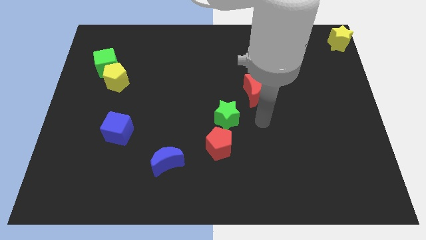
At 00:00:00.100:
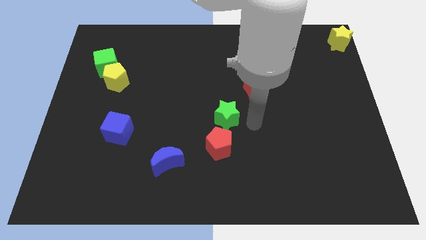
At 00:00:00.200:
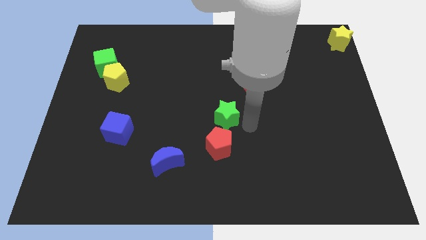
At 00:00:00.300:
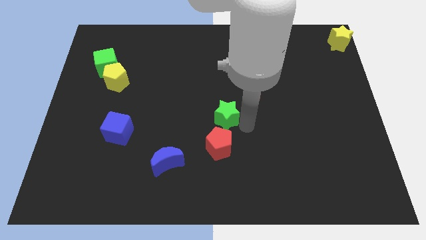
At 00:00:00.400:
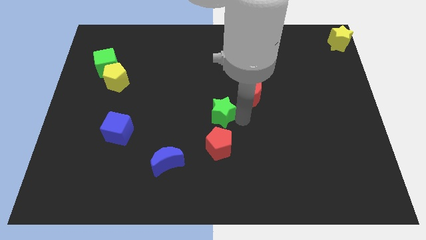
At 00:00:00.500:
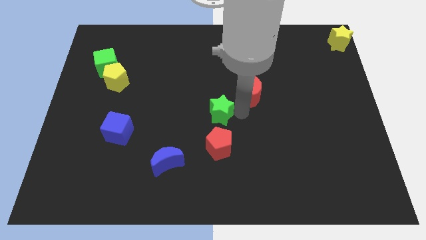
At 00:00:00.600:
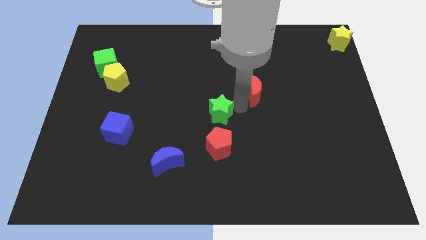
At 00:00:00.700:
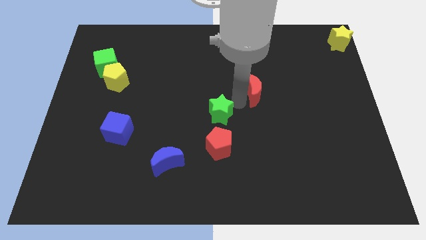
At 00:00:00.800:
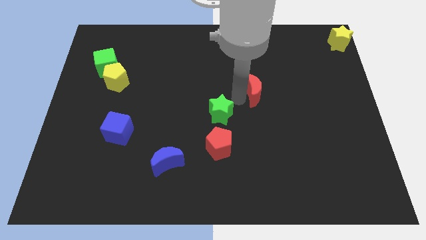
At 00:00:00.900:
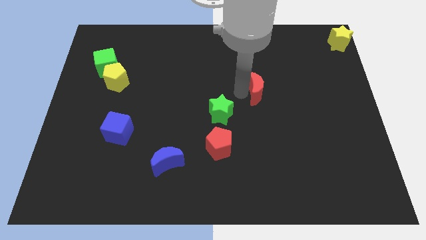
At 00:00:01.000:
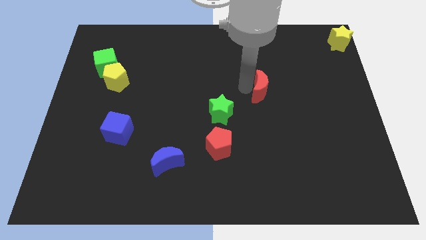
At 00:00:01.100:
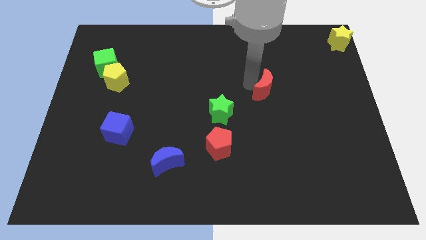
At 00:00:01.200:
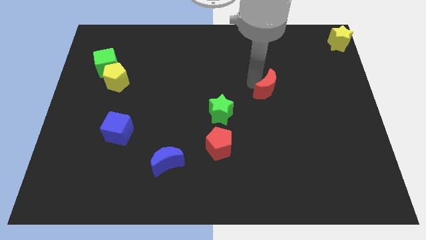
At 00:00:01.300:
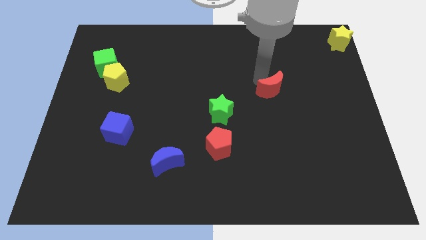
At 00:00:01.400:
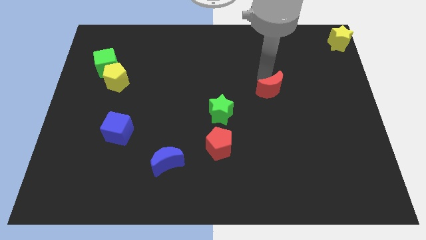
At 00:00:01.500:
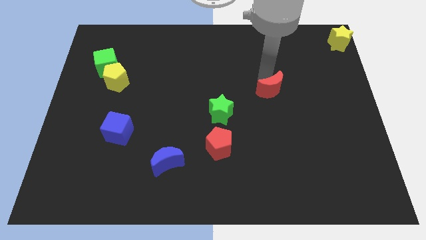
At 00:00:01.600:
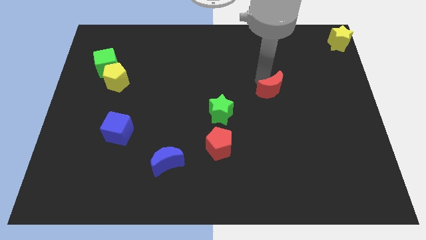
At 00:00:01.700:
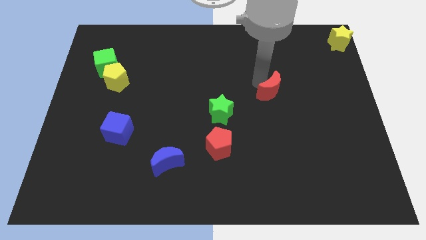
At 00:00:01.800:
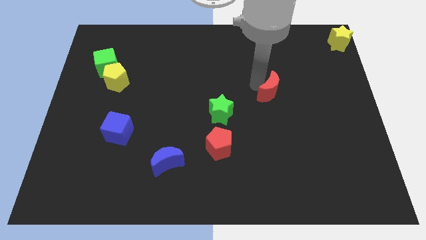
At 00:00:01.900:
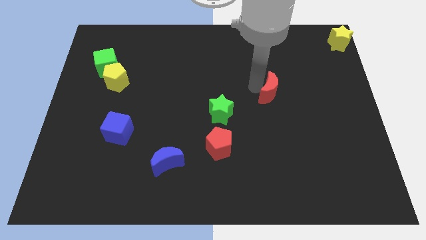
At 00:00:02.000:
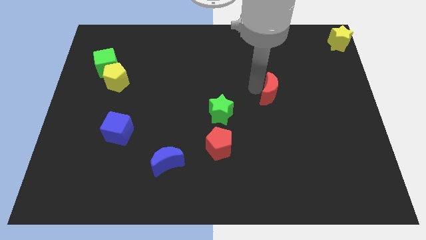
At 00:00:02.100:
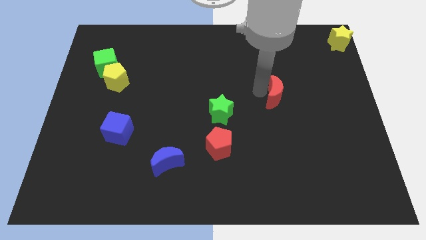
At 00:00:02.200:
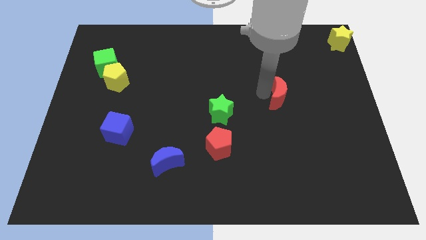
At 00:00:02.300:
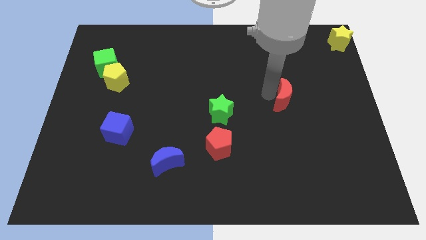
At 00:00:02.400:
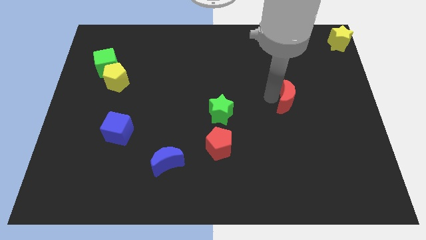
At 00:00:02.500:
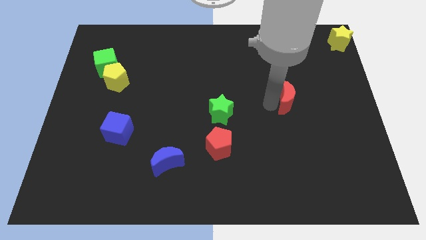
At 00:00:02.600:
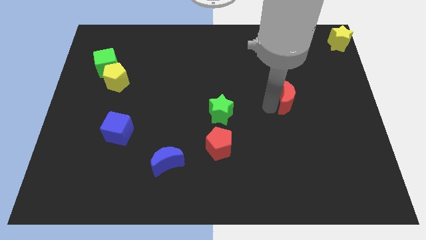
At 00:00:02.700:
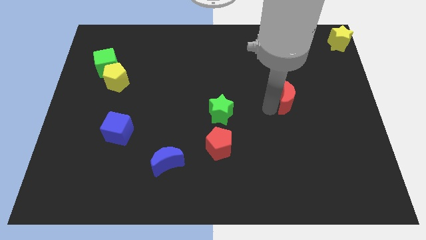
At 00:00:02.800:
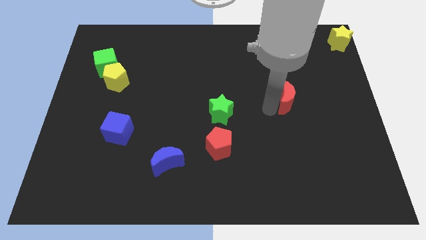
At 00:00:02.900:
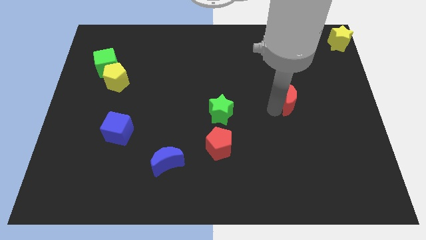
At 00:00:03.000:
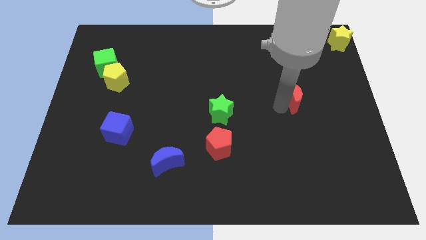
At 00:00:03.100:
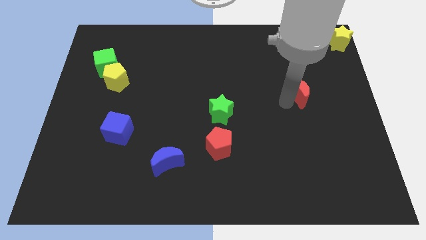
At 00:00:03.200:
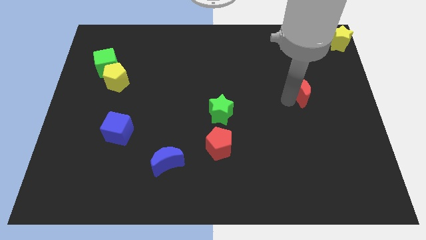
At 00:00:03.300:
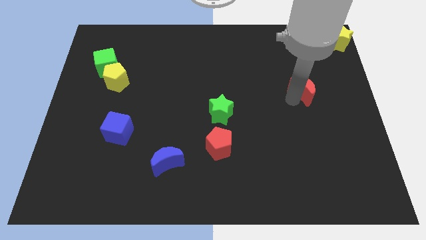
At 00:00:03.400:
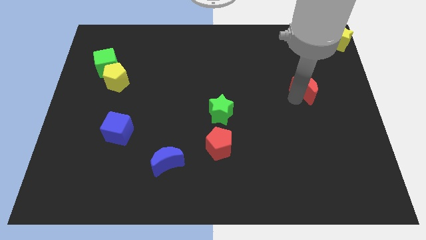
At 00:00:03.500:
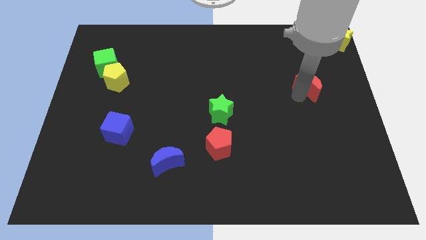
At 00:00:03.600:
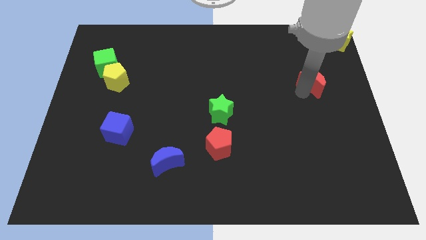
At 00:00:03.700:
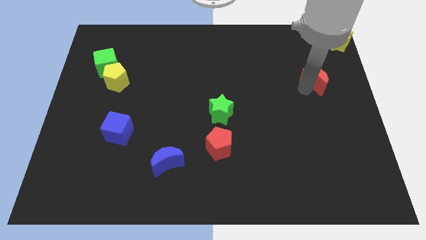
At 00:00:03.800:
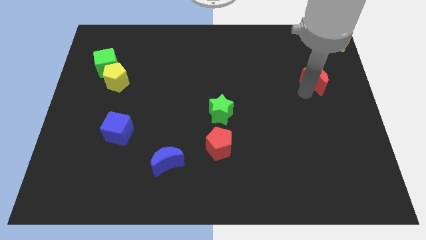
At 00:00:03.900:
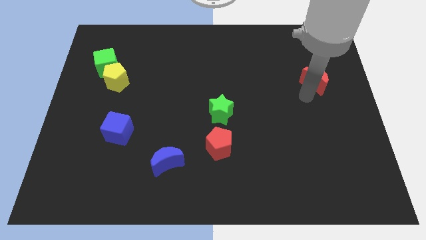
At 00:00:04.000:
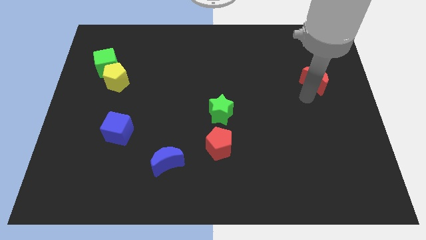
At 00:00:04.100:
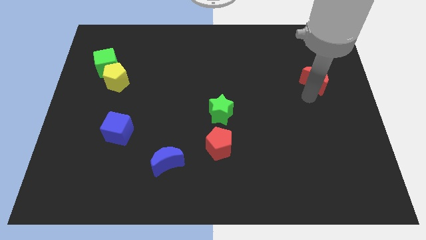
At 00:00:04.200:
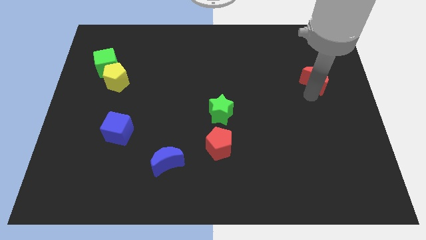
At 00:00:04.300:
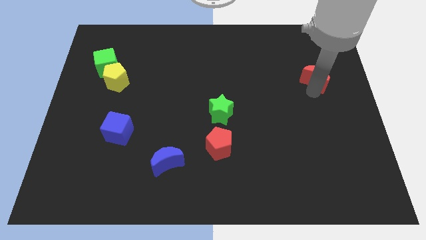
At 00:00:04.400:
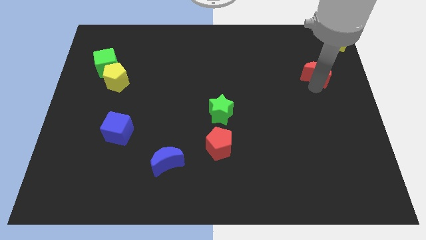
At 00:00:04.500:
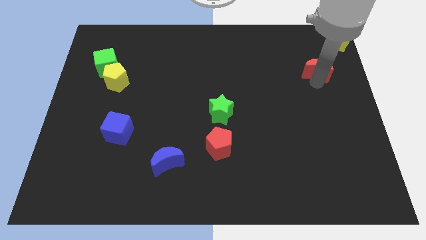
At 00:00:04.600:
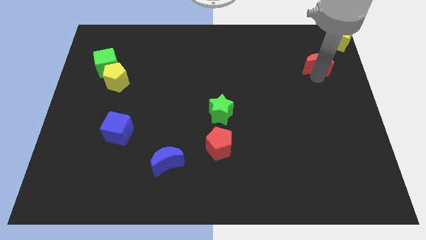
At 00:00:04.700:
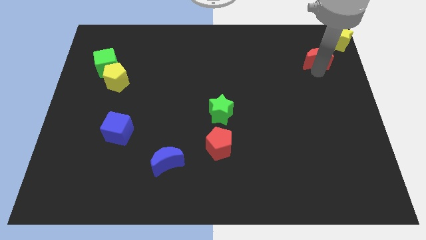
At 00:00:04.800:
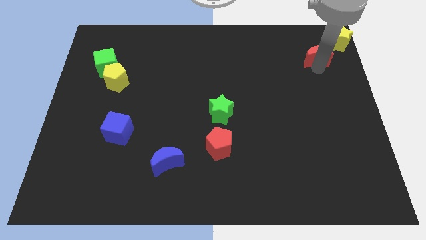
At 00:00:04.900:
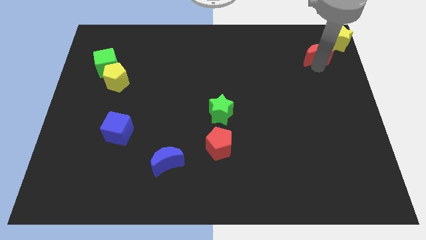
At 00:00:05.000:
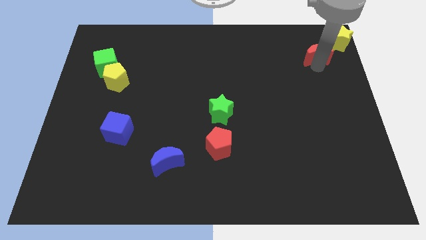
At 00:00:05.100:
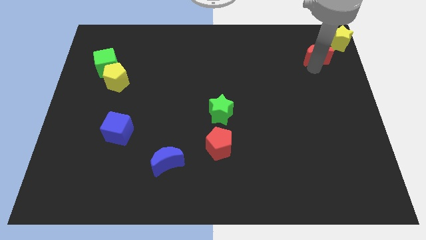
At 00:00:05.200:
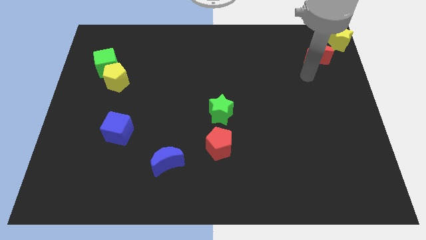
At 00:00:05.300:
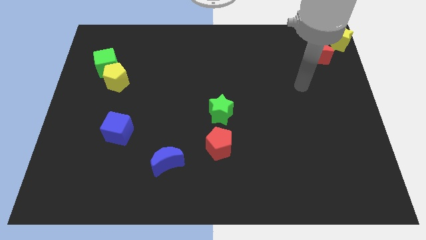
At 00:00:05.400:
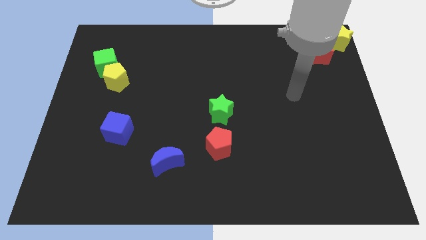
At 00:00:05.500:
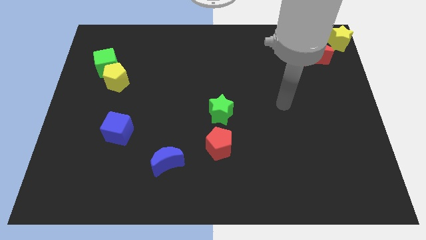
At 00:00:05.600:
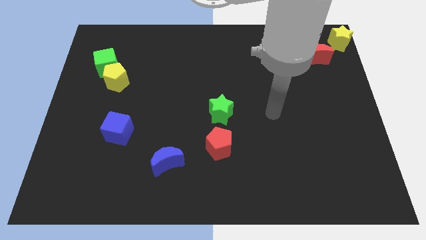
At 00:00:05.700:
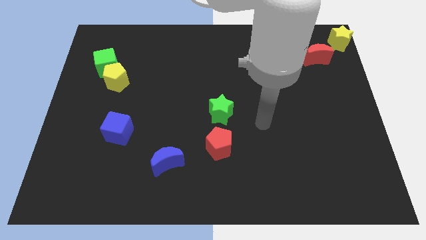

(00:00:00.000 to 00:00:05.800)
move red moon left below the yellow star

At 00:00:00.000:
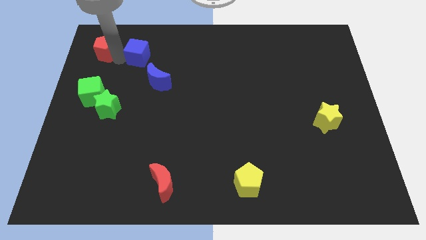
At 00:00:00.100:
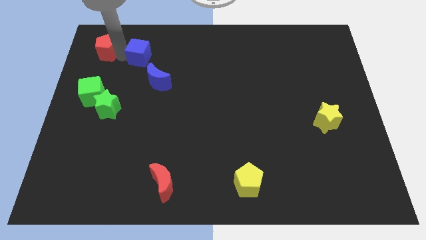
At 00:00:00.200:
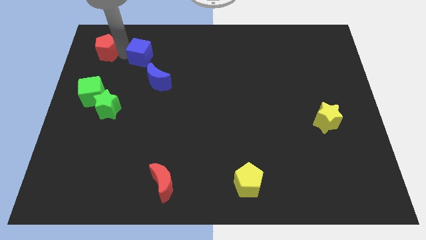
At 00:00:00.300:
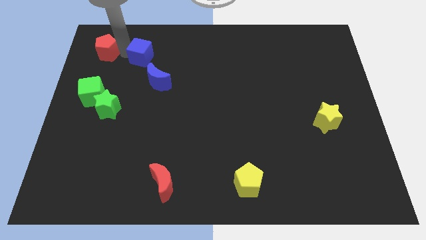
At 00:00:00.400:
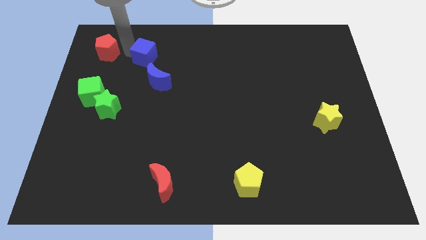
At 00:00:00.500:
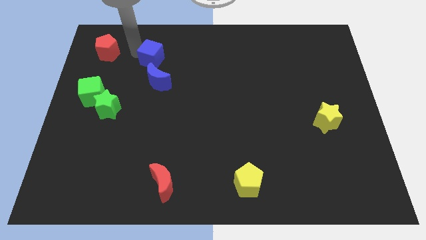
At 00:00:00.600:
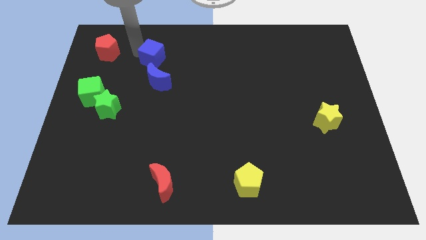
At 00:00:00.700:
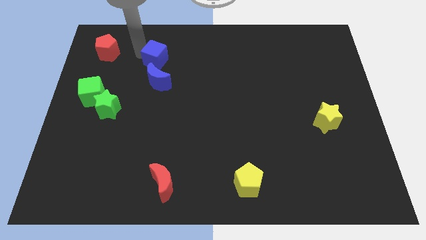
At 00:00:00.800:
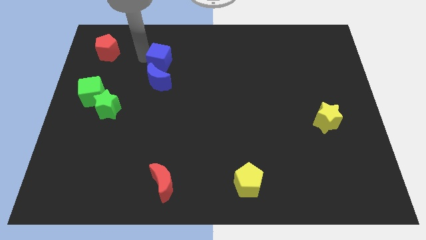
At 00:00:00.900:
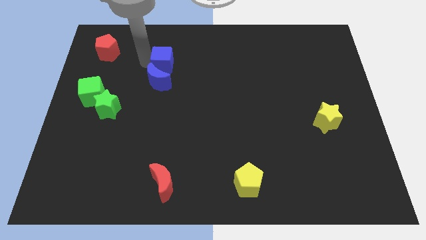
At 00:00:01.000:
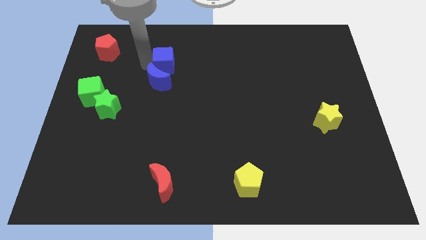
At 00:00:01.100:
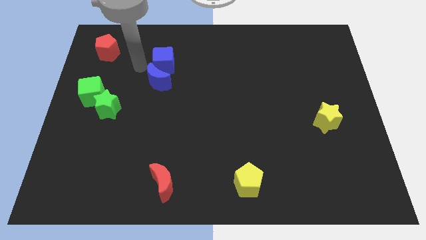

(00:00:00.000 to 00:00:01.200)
push the blue cube to the top of the blue crescent

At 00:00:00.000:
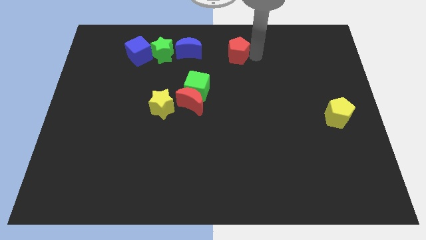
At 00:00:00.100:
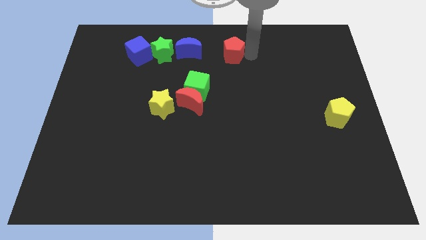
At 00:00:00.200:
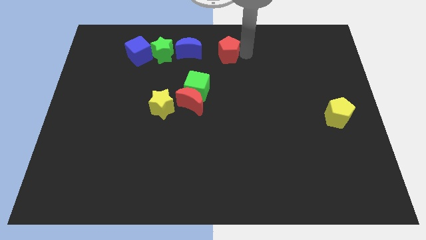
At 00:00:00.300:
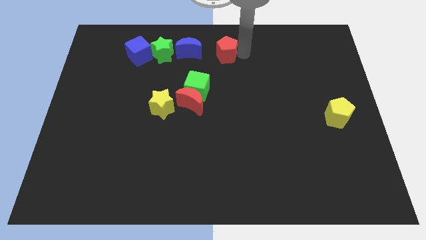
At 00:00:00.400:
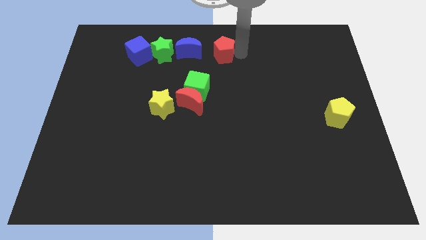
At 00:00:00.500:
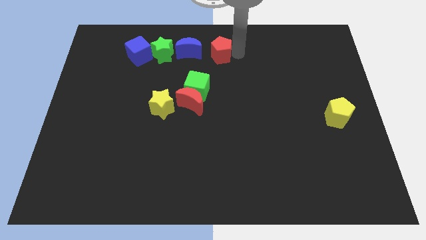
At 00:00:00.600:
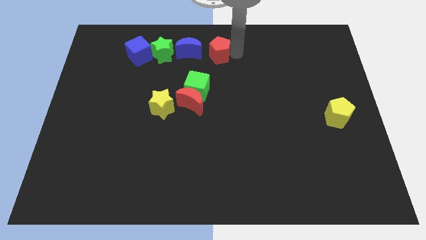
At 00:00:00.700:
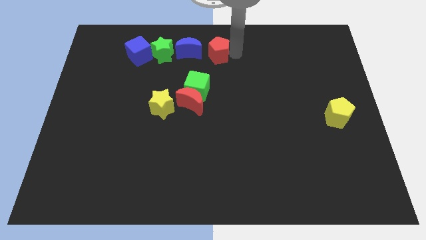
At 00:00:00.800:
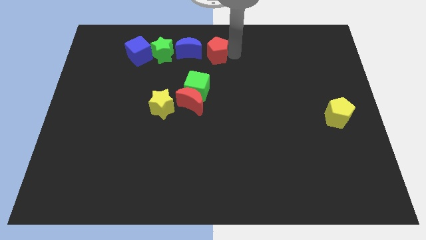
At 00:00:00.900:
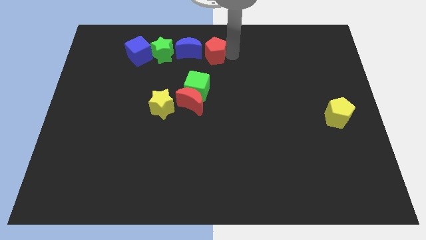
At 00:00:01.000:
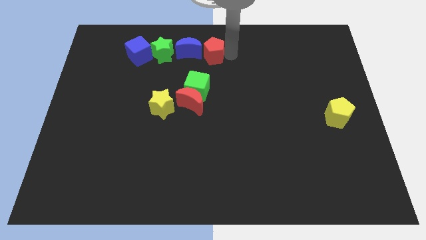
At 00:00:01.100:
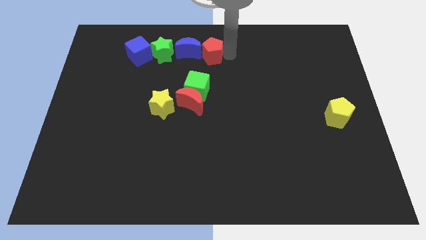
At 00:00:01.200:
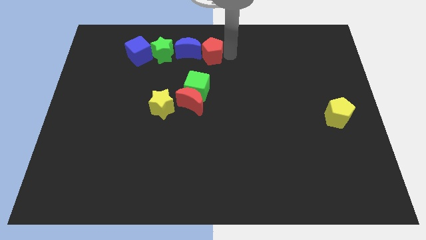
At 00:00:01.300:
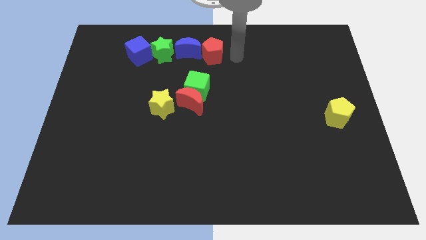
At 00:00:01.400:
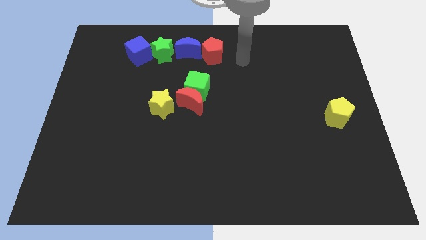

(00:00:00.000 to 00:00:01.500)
place red pentagon right to the blue crescent

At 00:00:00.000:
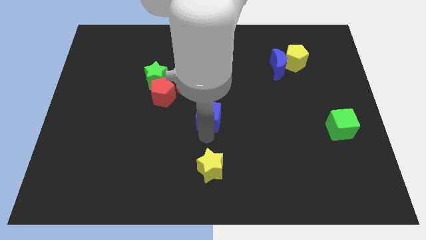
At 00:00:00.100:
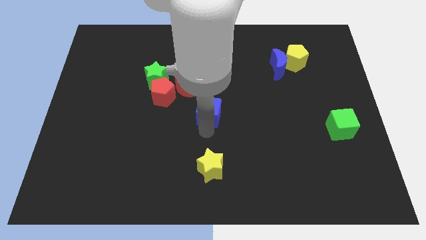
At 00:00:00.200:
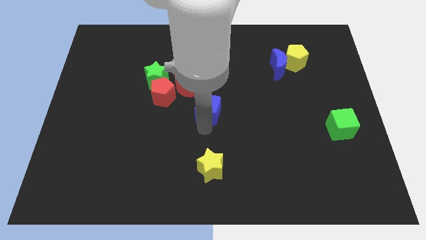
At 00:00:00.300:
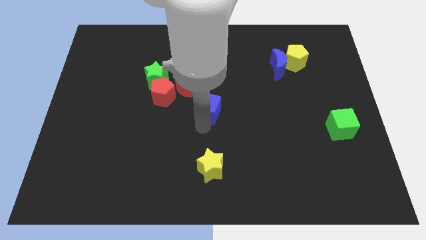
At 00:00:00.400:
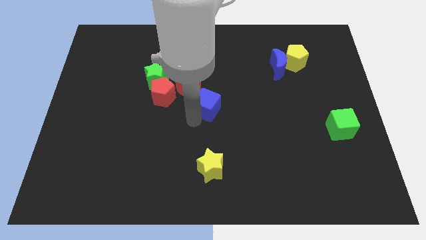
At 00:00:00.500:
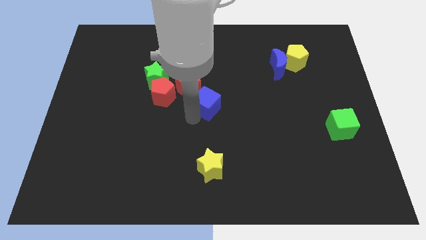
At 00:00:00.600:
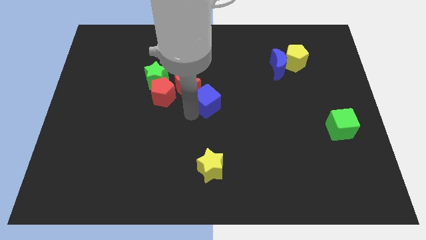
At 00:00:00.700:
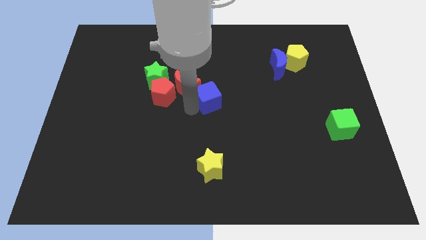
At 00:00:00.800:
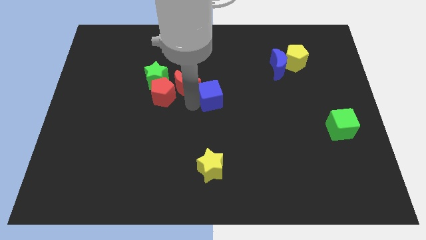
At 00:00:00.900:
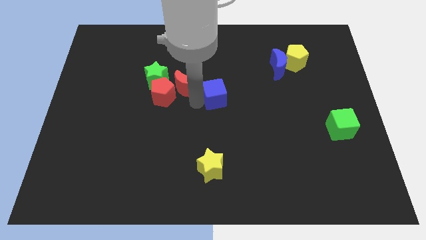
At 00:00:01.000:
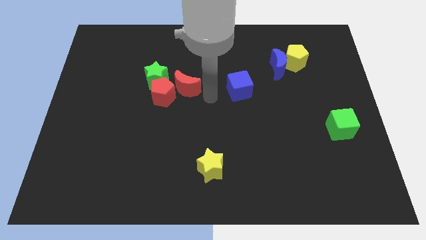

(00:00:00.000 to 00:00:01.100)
push the blue cube to the right of the red crescent
